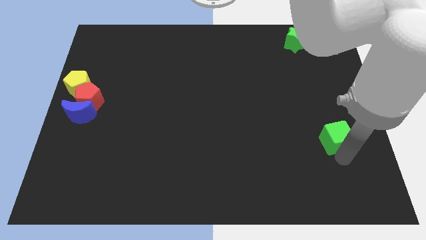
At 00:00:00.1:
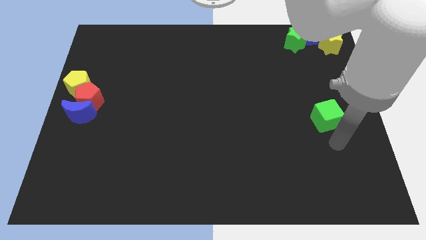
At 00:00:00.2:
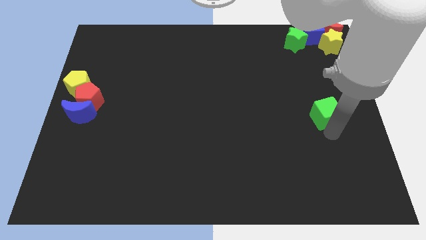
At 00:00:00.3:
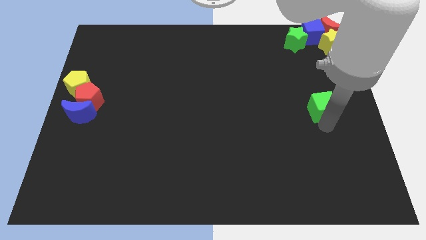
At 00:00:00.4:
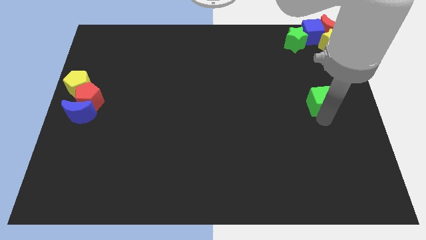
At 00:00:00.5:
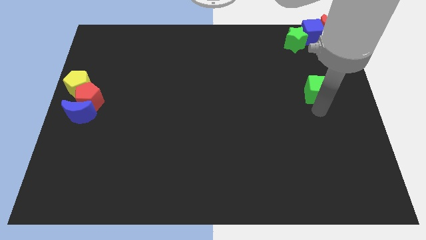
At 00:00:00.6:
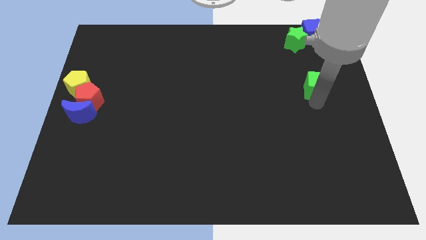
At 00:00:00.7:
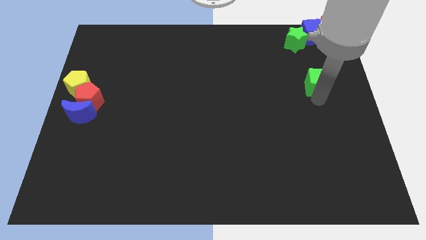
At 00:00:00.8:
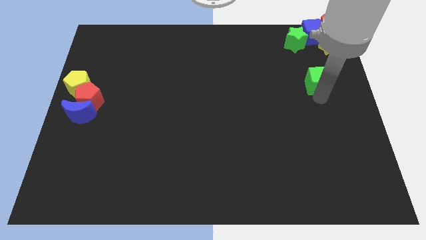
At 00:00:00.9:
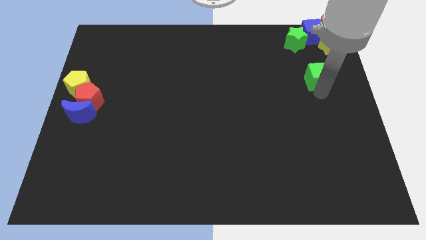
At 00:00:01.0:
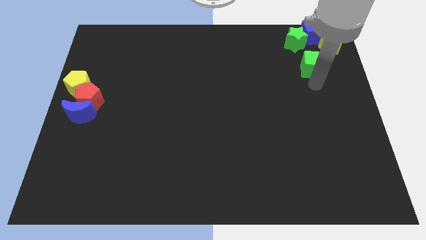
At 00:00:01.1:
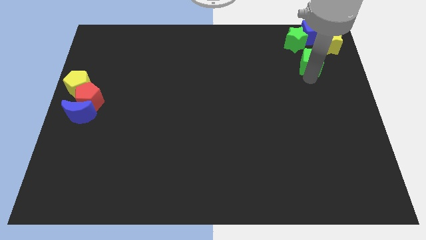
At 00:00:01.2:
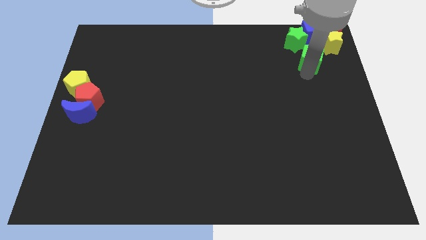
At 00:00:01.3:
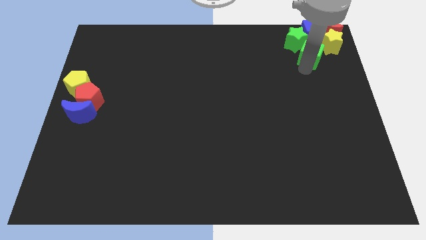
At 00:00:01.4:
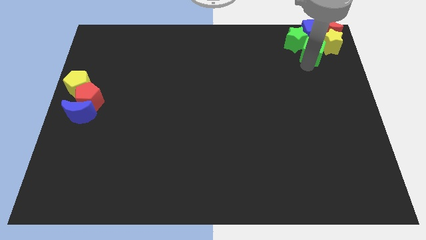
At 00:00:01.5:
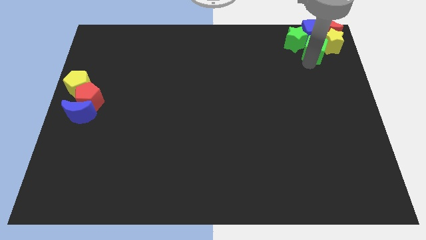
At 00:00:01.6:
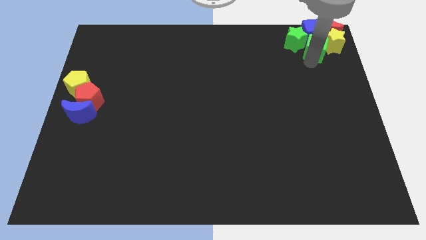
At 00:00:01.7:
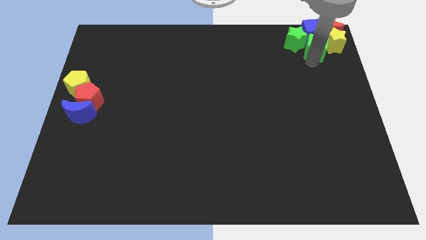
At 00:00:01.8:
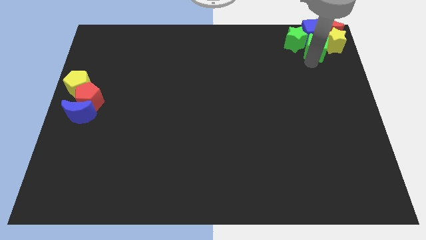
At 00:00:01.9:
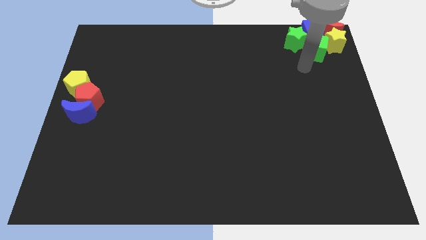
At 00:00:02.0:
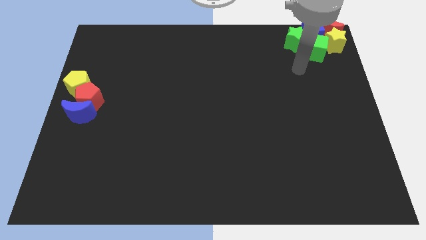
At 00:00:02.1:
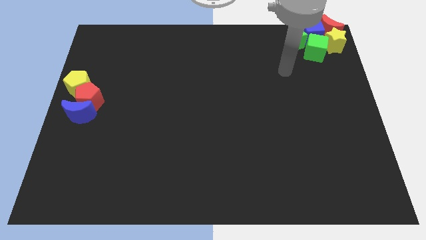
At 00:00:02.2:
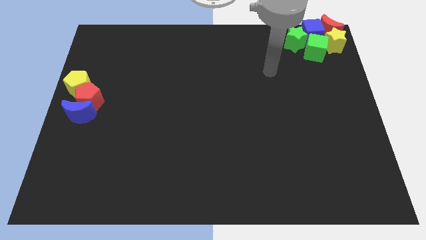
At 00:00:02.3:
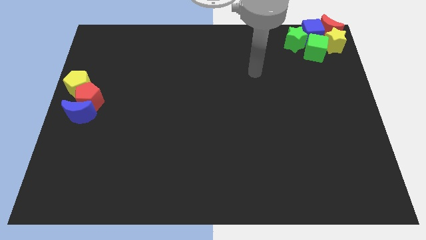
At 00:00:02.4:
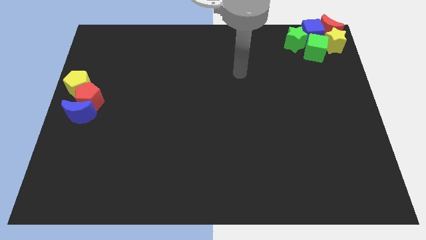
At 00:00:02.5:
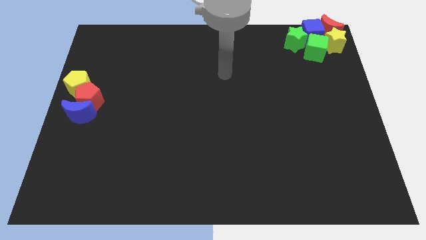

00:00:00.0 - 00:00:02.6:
put the green cube in to the blue cube

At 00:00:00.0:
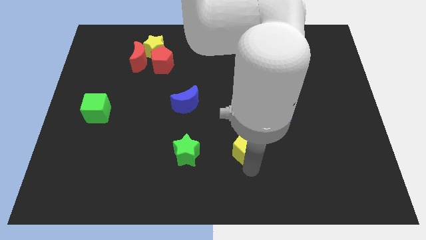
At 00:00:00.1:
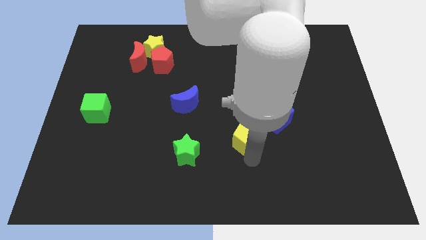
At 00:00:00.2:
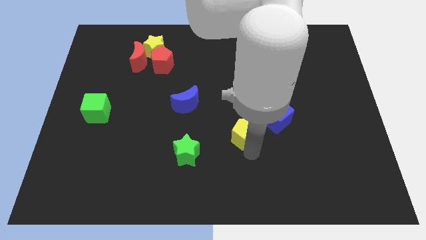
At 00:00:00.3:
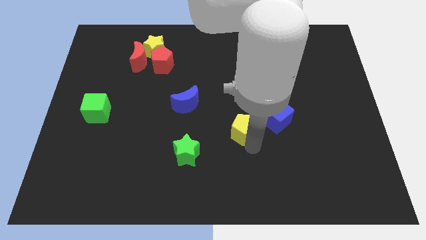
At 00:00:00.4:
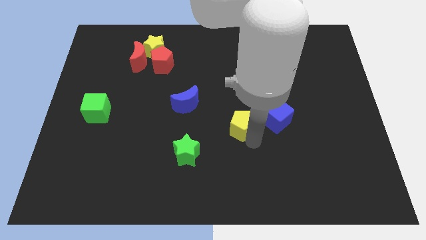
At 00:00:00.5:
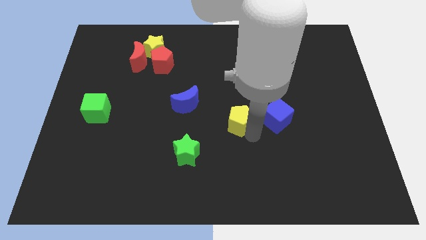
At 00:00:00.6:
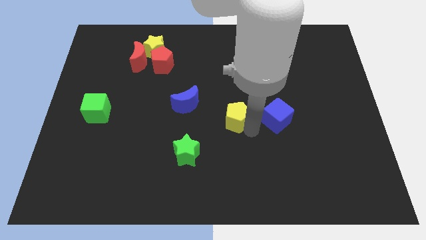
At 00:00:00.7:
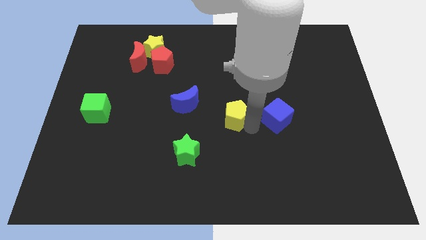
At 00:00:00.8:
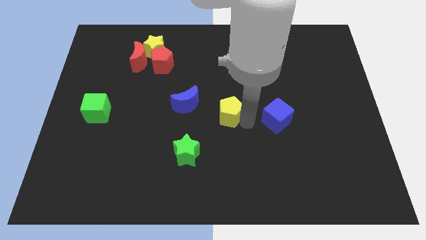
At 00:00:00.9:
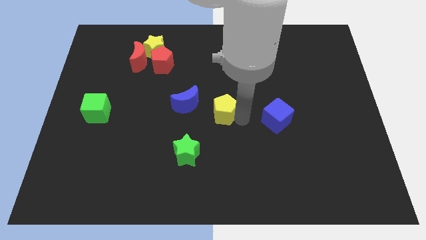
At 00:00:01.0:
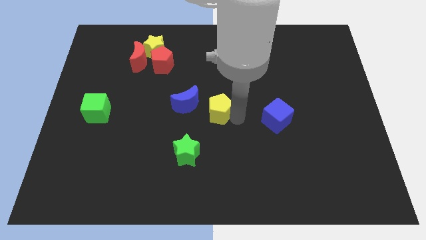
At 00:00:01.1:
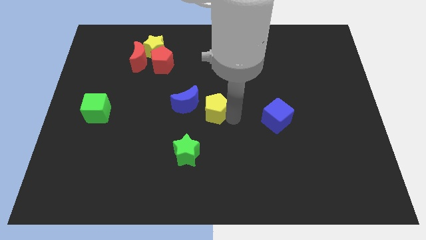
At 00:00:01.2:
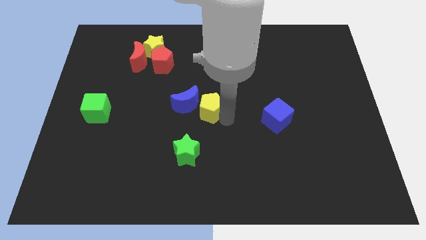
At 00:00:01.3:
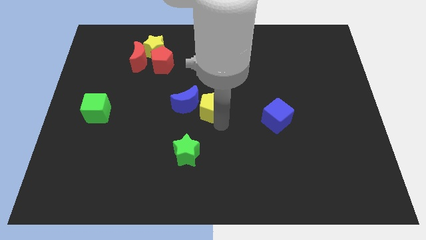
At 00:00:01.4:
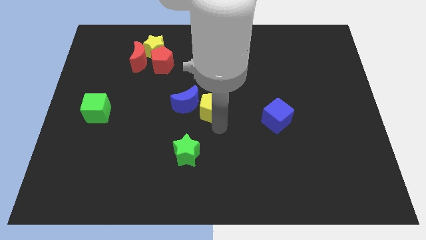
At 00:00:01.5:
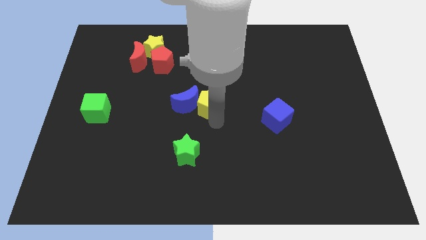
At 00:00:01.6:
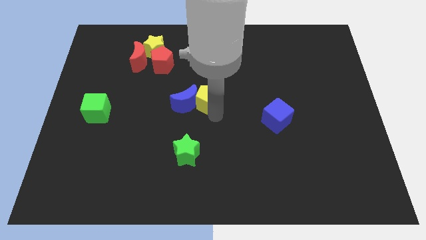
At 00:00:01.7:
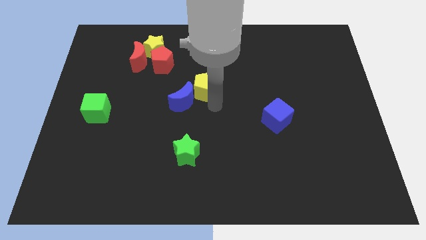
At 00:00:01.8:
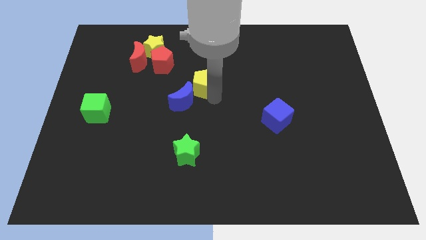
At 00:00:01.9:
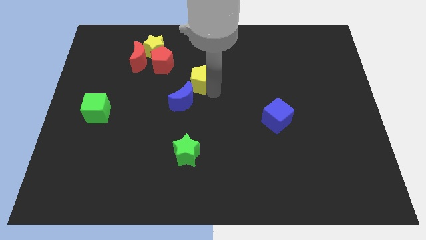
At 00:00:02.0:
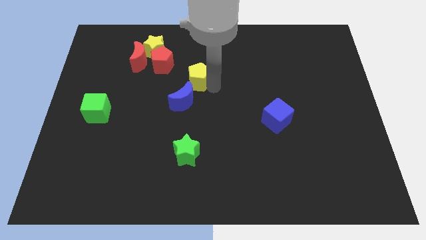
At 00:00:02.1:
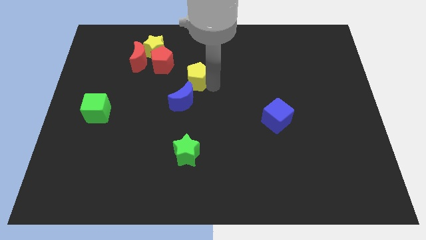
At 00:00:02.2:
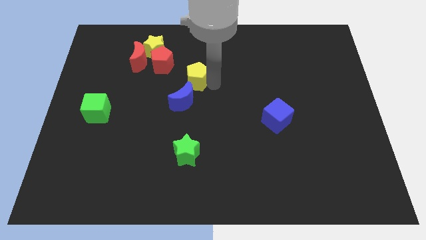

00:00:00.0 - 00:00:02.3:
move yellow pentagon to the center of the board

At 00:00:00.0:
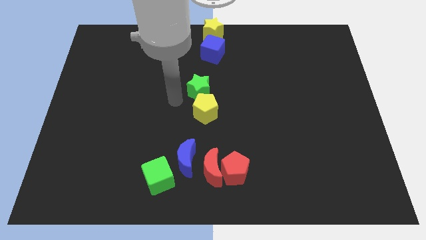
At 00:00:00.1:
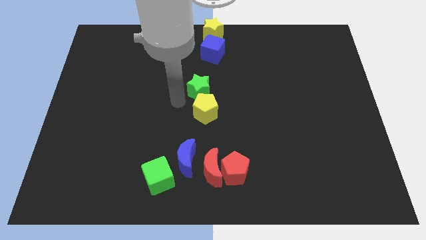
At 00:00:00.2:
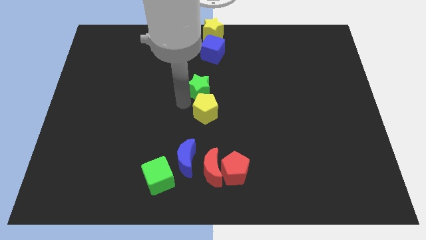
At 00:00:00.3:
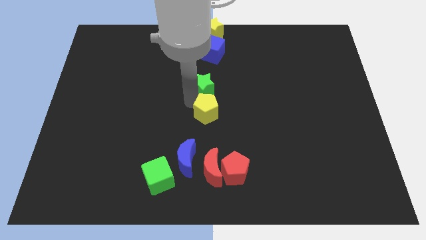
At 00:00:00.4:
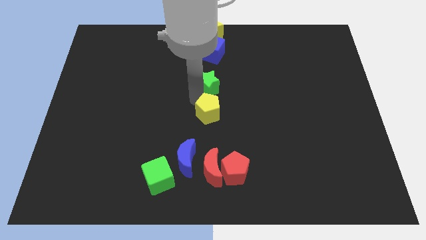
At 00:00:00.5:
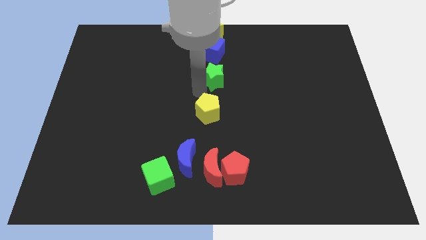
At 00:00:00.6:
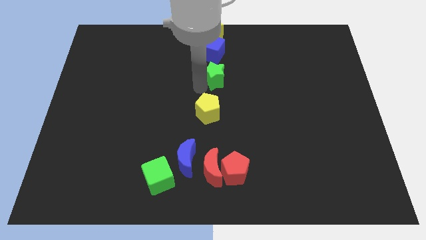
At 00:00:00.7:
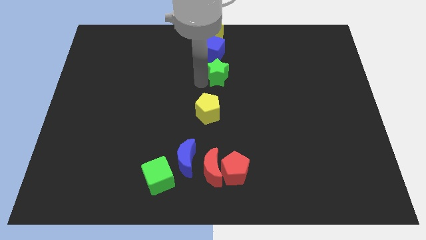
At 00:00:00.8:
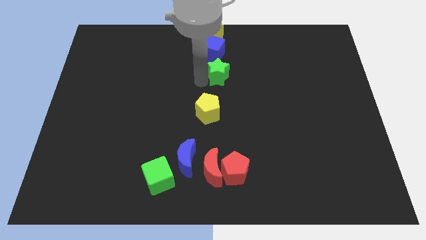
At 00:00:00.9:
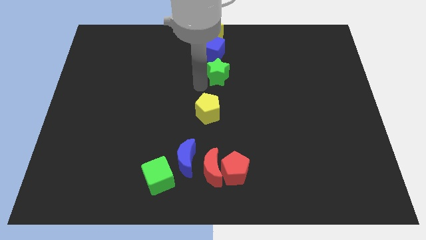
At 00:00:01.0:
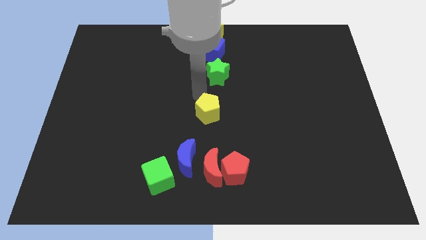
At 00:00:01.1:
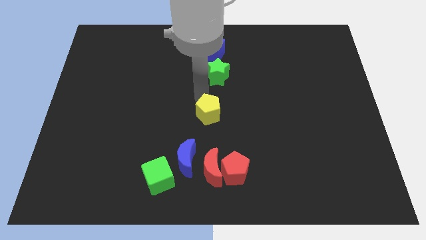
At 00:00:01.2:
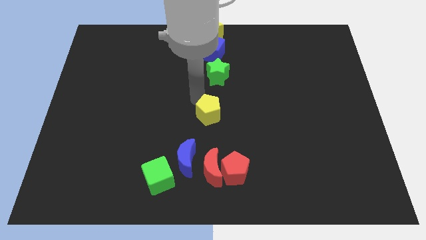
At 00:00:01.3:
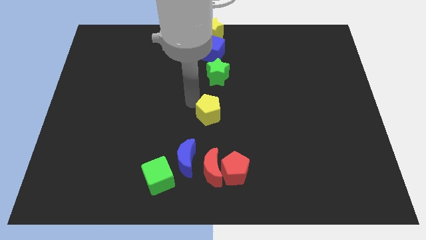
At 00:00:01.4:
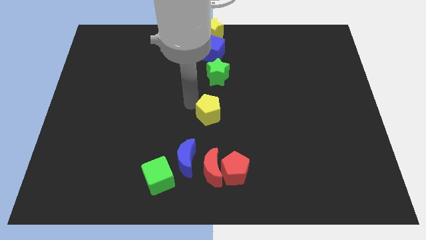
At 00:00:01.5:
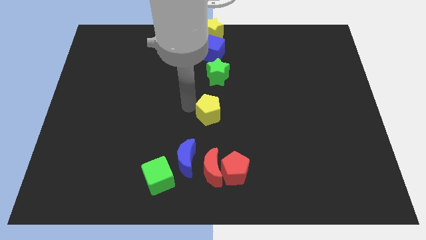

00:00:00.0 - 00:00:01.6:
move the green star slightly to the top

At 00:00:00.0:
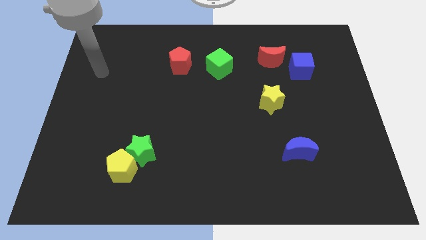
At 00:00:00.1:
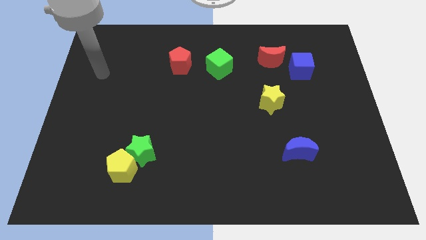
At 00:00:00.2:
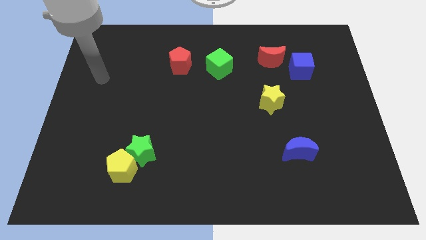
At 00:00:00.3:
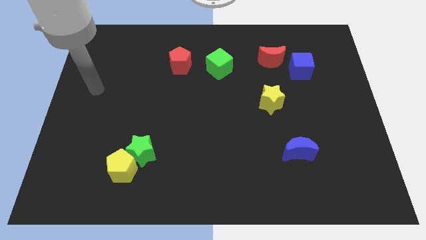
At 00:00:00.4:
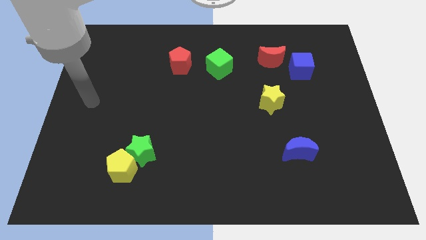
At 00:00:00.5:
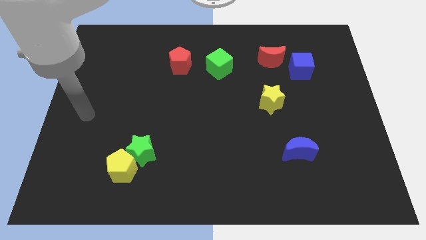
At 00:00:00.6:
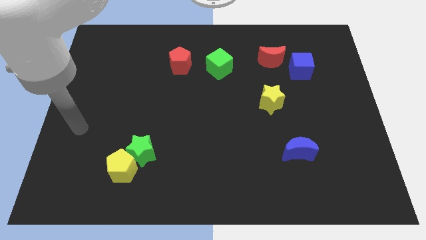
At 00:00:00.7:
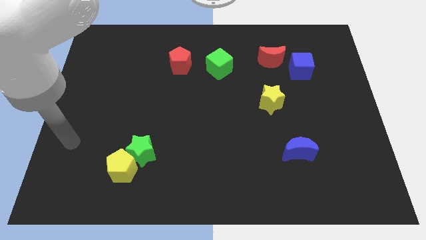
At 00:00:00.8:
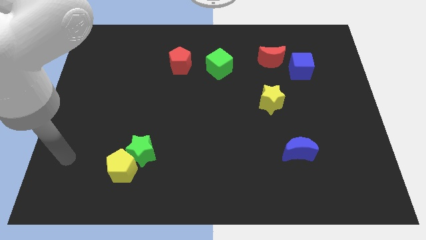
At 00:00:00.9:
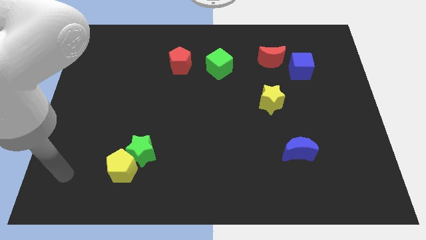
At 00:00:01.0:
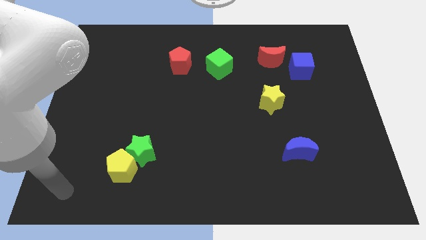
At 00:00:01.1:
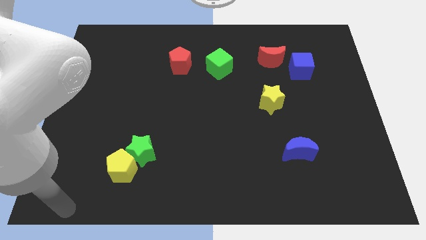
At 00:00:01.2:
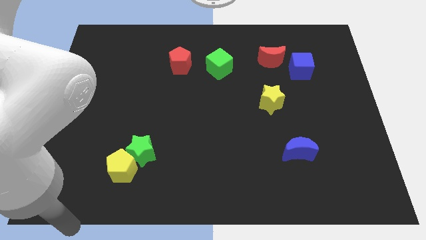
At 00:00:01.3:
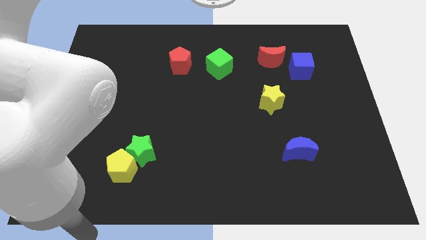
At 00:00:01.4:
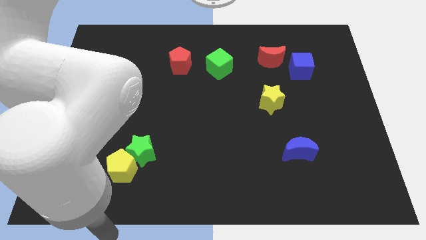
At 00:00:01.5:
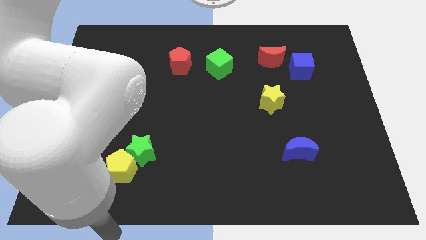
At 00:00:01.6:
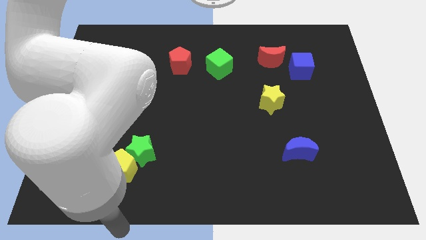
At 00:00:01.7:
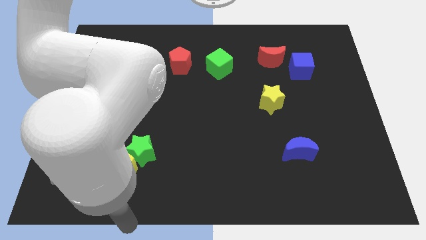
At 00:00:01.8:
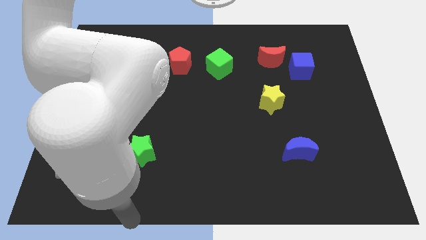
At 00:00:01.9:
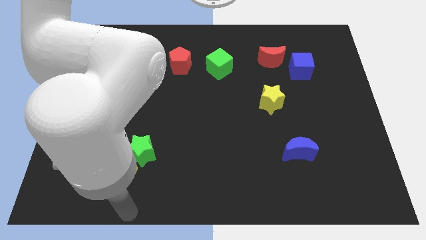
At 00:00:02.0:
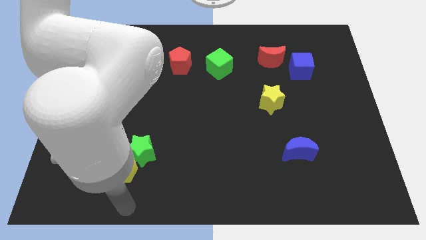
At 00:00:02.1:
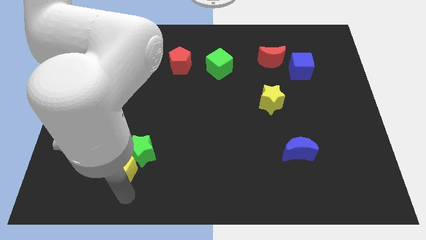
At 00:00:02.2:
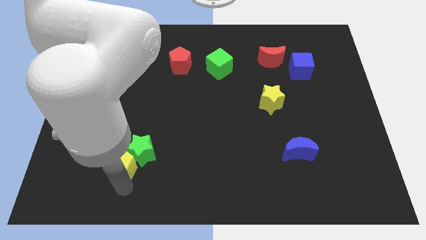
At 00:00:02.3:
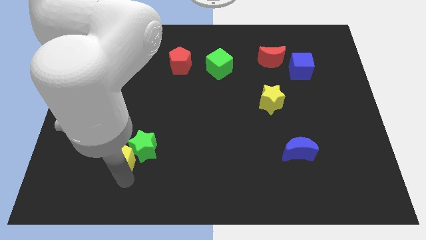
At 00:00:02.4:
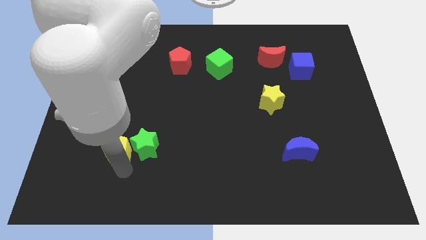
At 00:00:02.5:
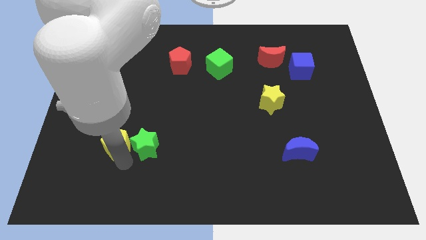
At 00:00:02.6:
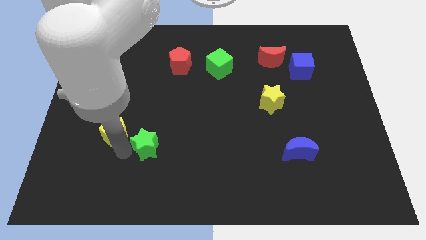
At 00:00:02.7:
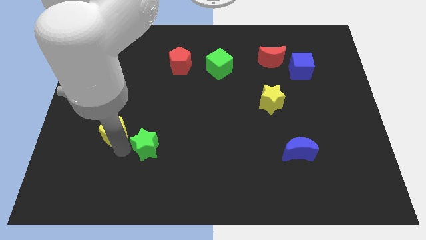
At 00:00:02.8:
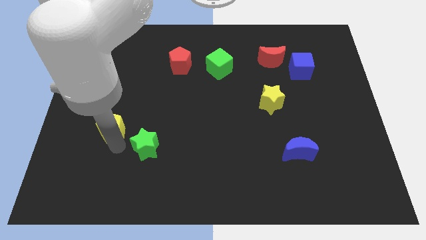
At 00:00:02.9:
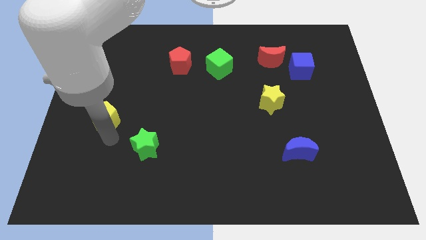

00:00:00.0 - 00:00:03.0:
separate the yellow pentagon from green staar
